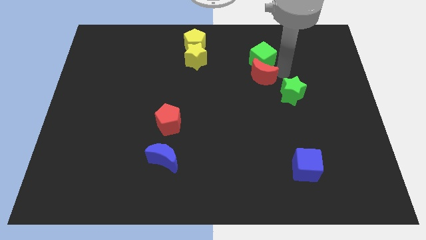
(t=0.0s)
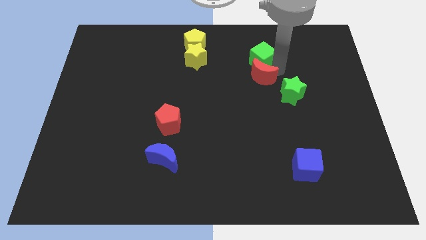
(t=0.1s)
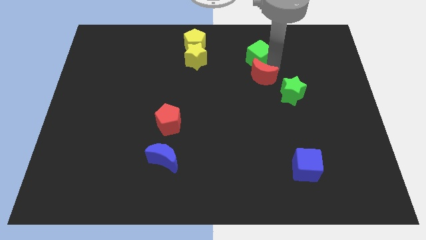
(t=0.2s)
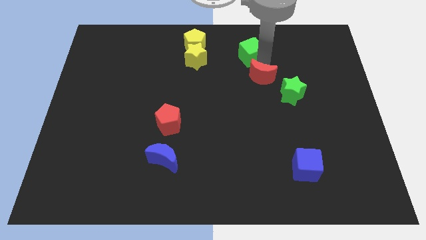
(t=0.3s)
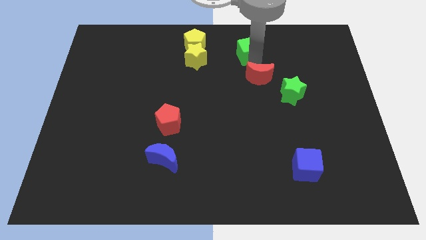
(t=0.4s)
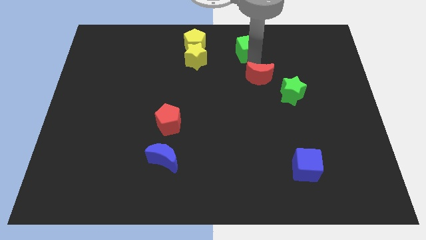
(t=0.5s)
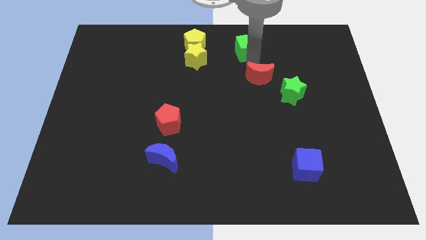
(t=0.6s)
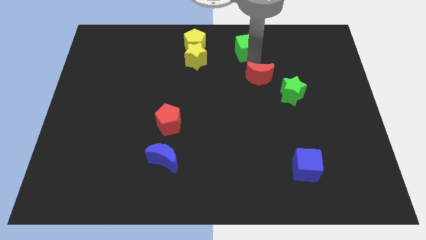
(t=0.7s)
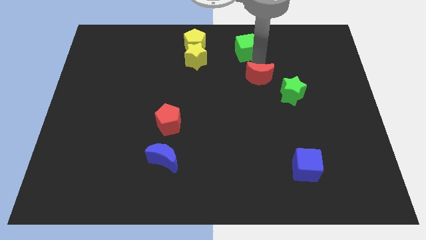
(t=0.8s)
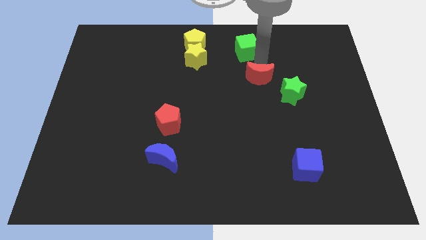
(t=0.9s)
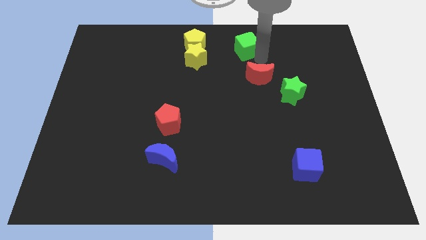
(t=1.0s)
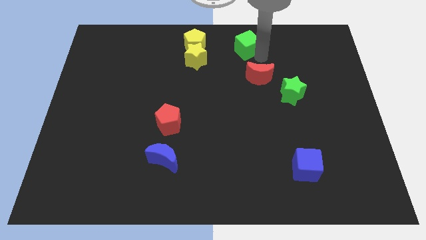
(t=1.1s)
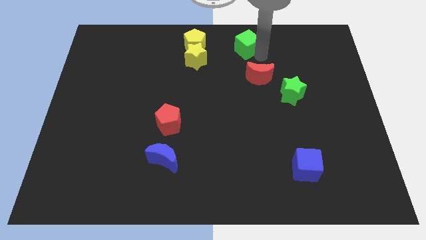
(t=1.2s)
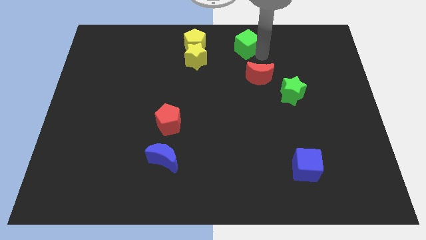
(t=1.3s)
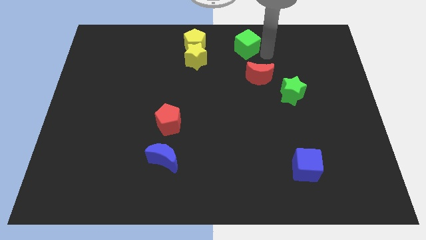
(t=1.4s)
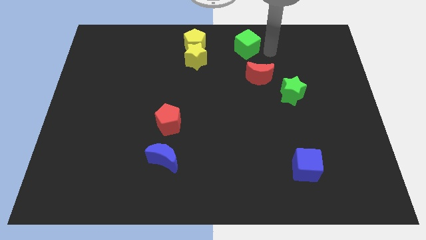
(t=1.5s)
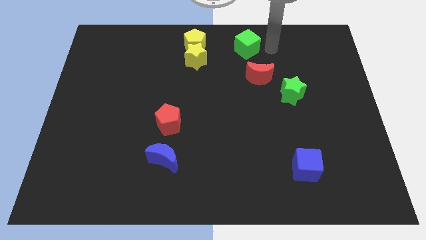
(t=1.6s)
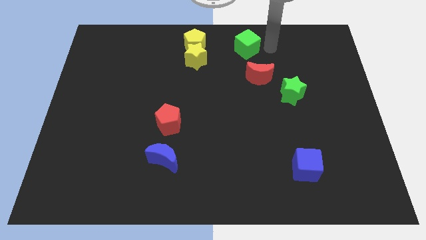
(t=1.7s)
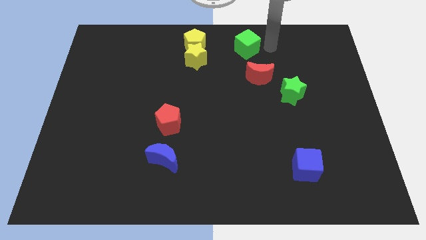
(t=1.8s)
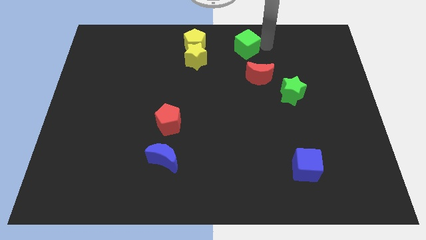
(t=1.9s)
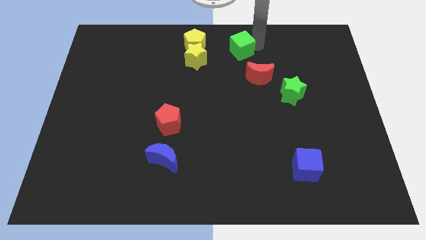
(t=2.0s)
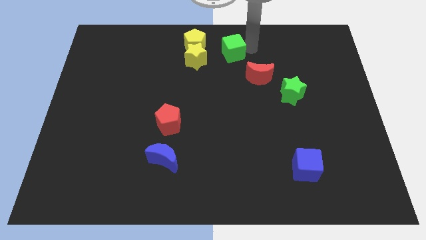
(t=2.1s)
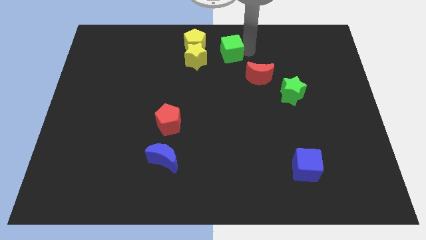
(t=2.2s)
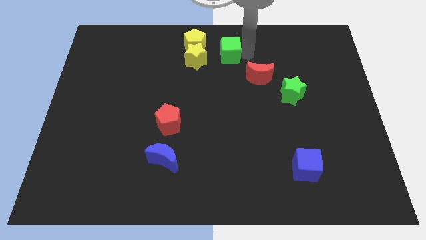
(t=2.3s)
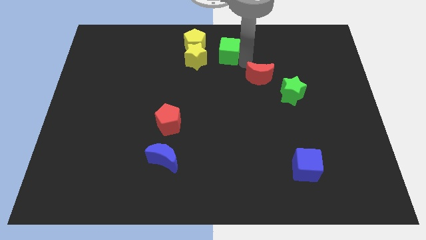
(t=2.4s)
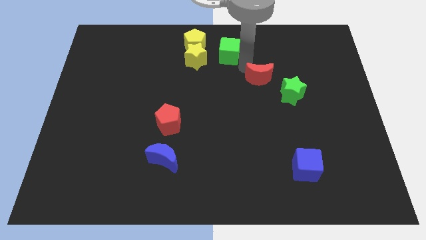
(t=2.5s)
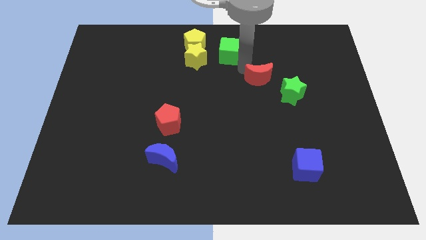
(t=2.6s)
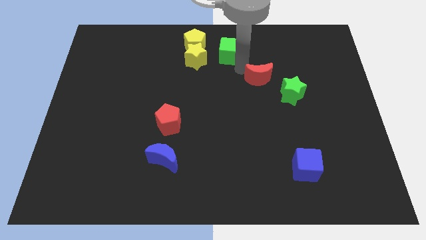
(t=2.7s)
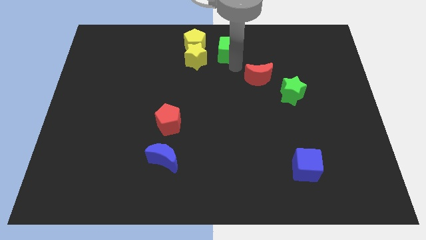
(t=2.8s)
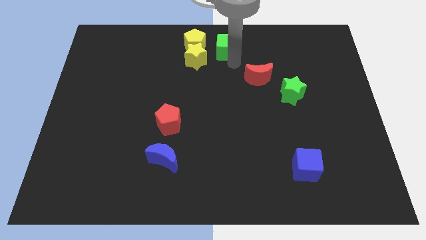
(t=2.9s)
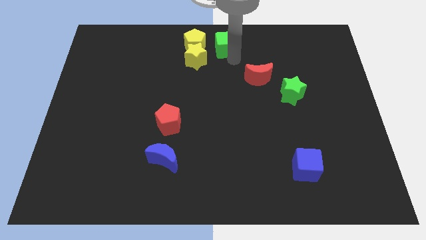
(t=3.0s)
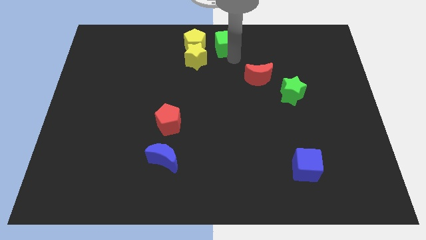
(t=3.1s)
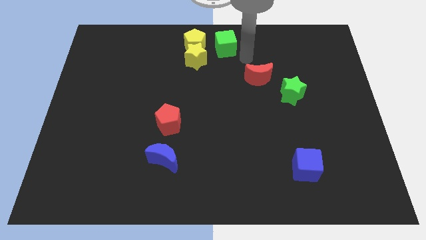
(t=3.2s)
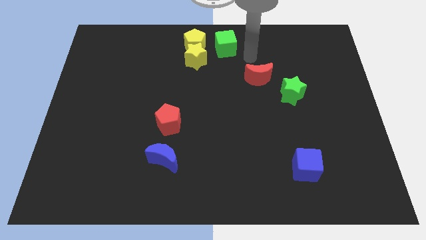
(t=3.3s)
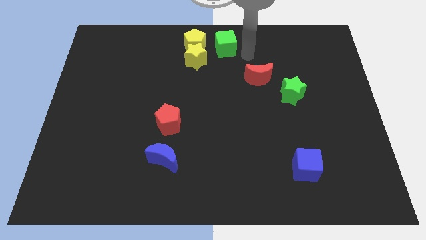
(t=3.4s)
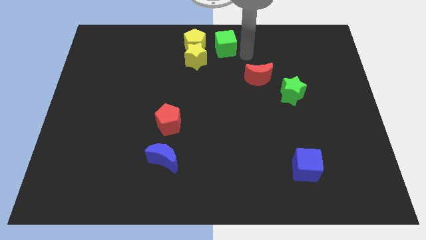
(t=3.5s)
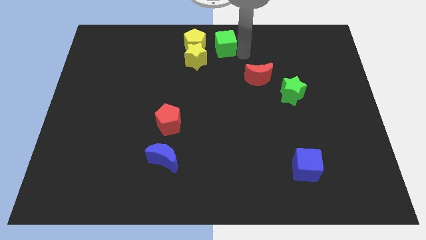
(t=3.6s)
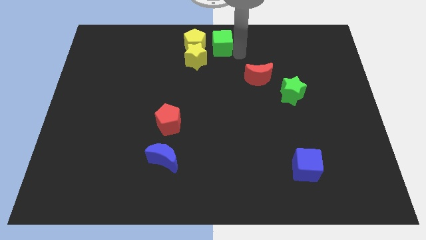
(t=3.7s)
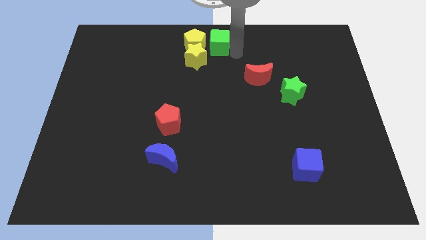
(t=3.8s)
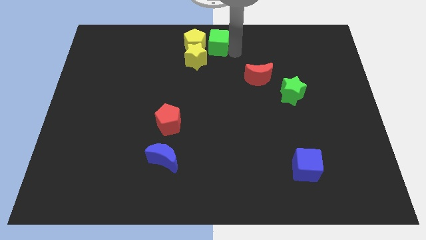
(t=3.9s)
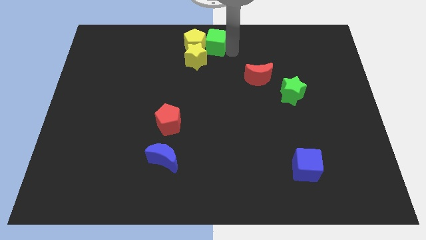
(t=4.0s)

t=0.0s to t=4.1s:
separate green cube from red moon

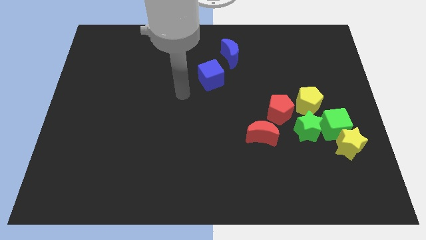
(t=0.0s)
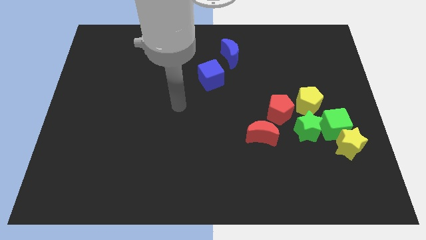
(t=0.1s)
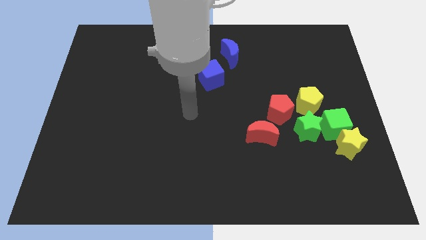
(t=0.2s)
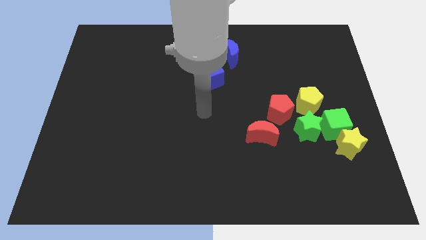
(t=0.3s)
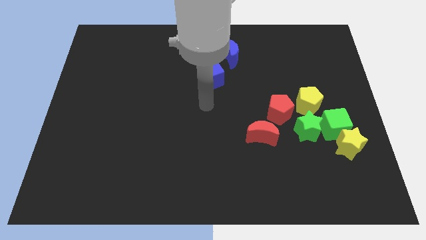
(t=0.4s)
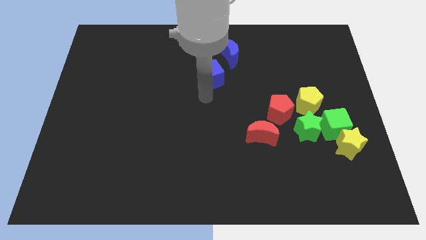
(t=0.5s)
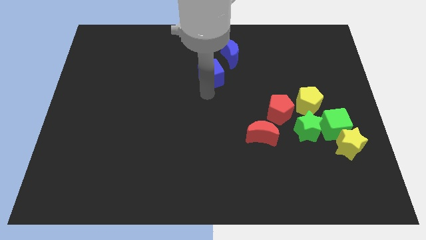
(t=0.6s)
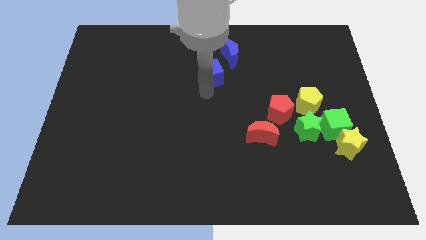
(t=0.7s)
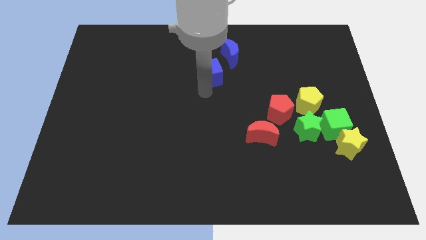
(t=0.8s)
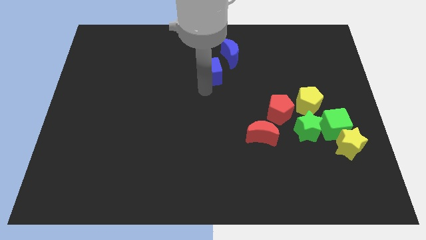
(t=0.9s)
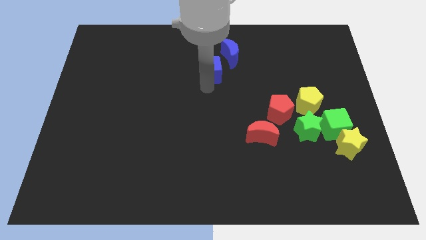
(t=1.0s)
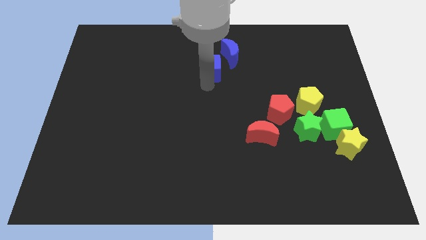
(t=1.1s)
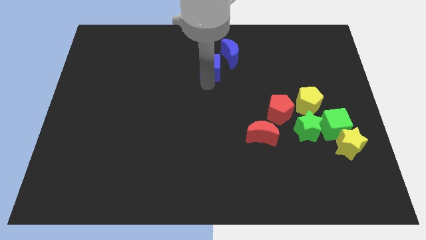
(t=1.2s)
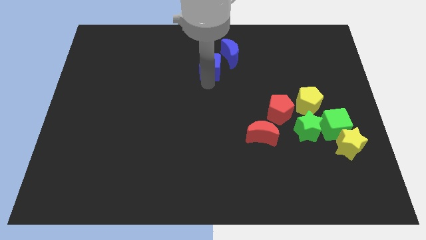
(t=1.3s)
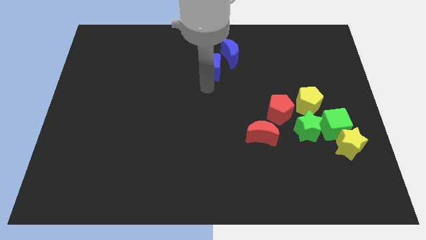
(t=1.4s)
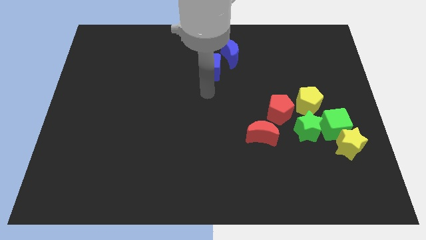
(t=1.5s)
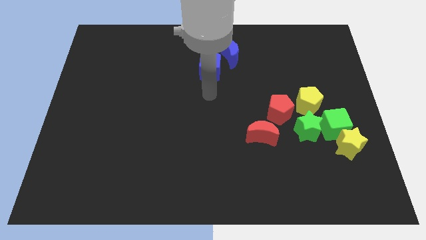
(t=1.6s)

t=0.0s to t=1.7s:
push the blue cube below the blue moon

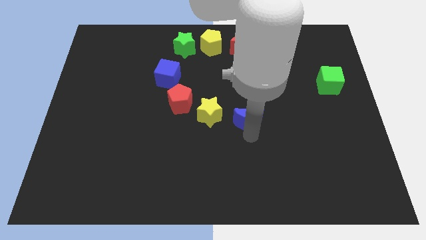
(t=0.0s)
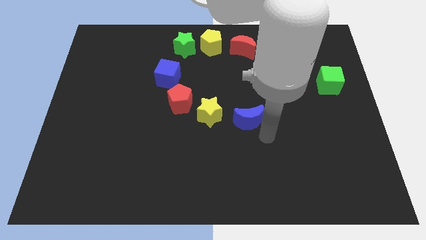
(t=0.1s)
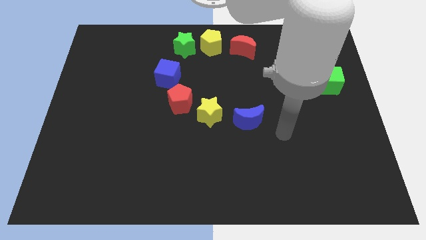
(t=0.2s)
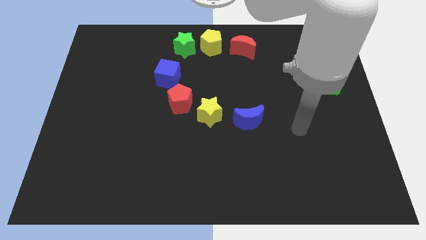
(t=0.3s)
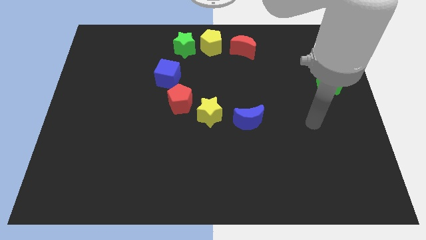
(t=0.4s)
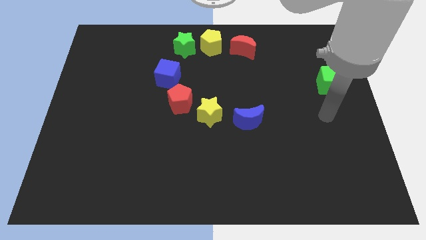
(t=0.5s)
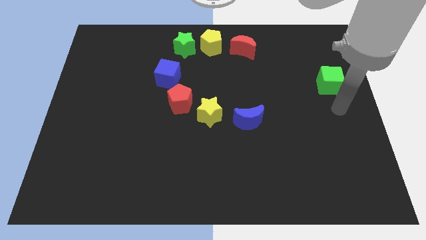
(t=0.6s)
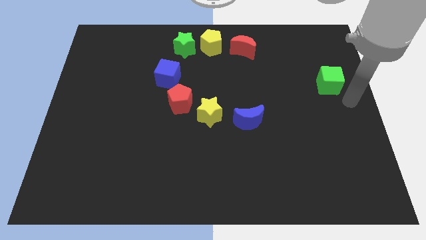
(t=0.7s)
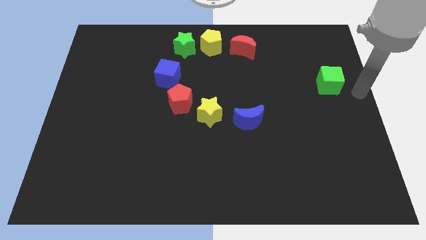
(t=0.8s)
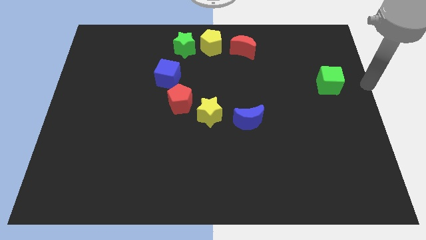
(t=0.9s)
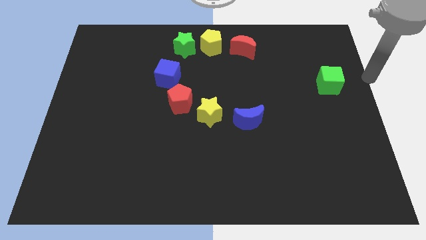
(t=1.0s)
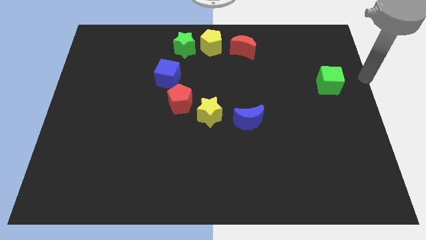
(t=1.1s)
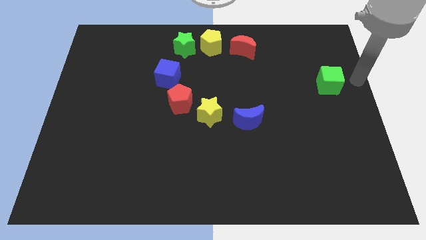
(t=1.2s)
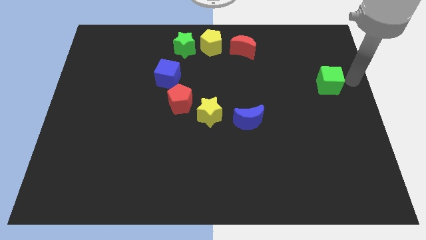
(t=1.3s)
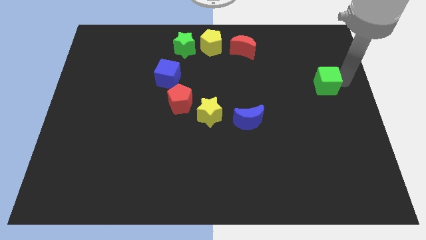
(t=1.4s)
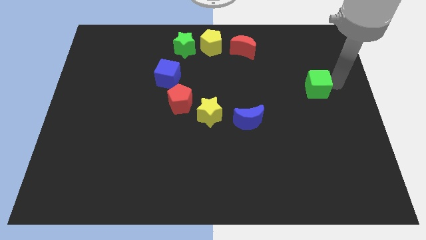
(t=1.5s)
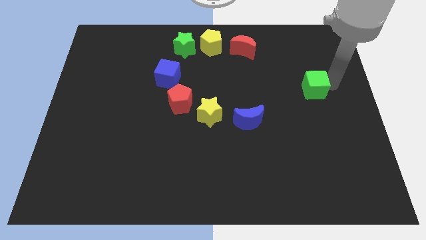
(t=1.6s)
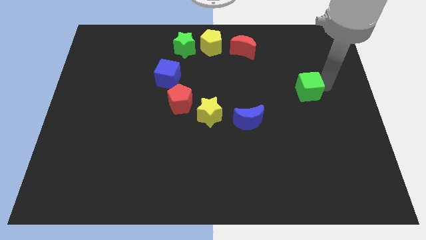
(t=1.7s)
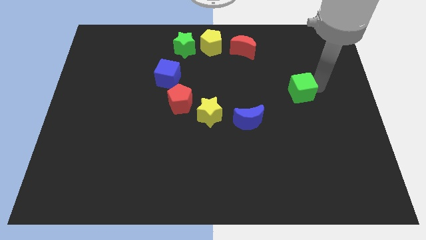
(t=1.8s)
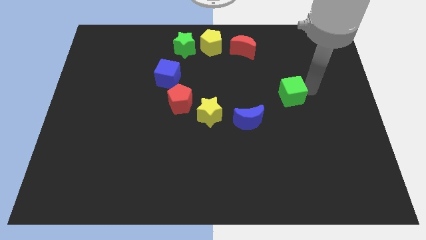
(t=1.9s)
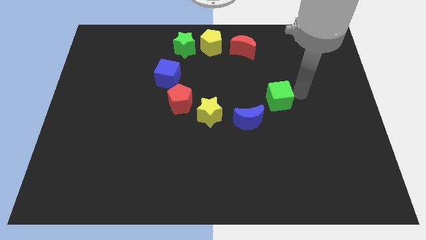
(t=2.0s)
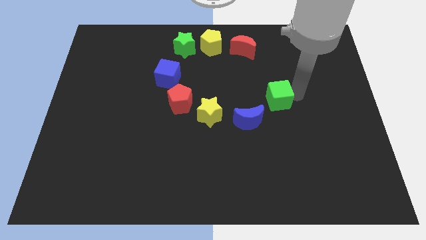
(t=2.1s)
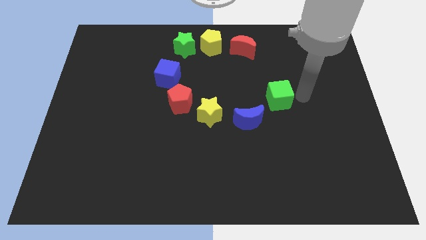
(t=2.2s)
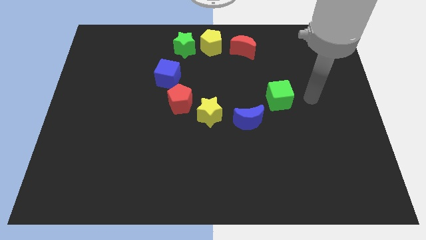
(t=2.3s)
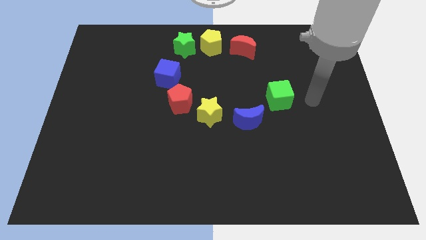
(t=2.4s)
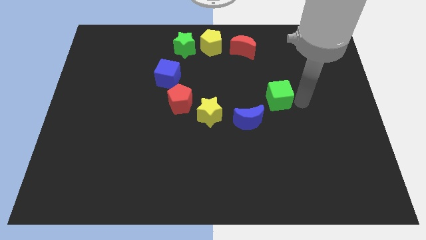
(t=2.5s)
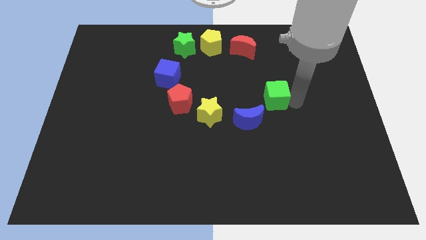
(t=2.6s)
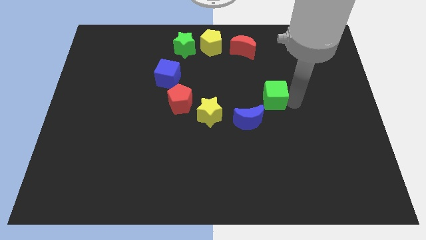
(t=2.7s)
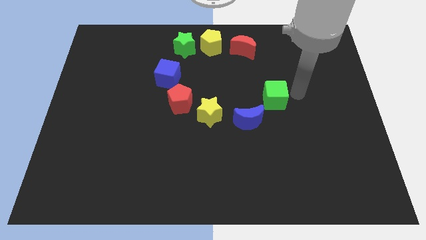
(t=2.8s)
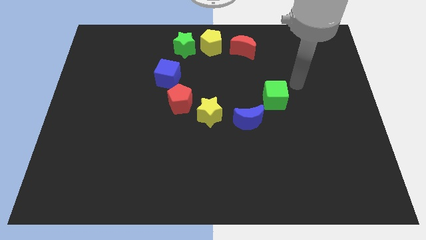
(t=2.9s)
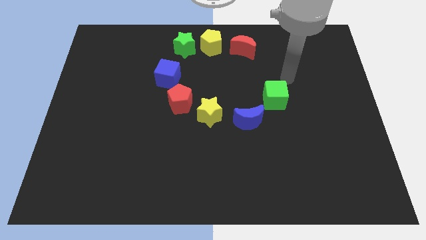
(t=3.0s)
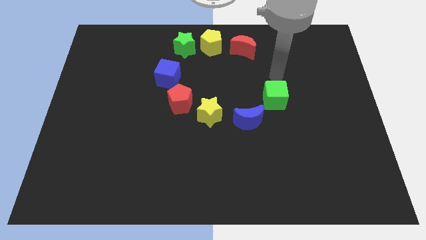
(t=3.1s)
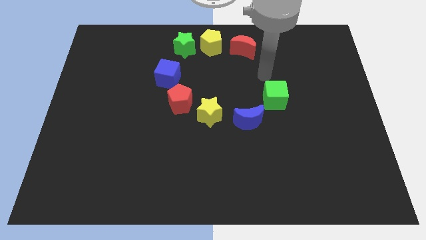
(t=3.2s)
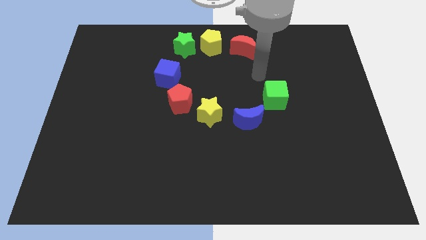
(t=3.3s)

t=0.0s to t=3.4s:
place the green cube diagonally top right to the blue moon
